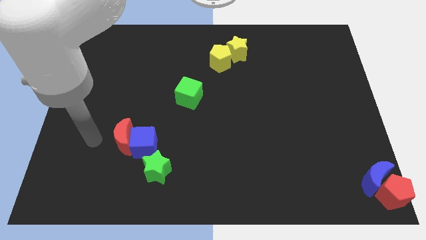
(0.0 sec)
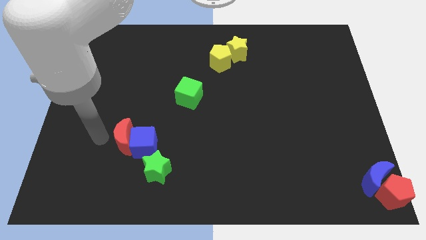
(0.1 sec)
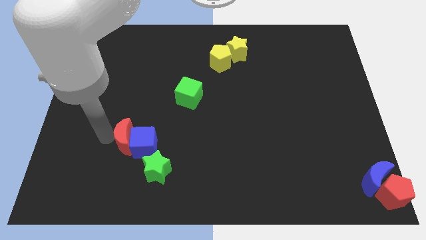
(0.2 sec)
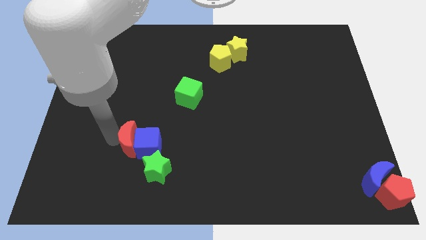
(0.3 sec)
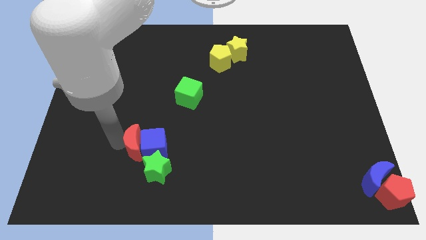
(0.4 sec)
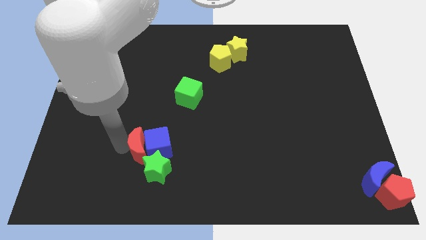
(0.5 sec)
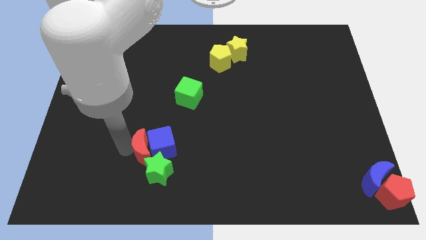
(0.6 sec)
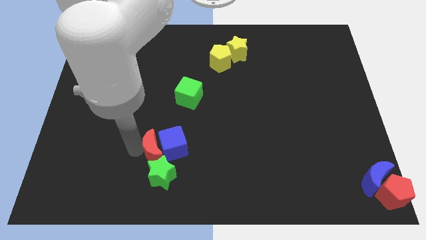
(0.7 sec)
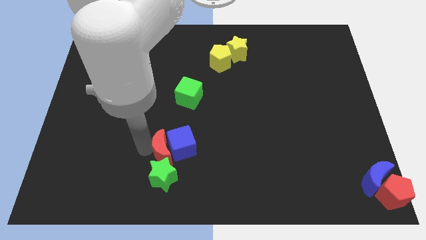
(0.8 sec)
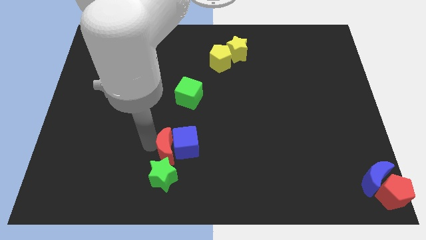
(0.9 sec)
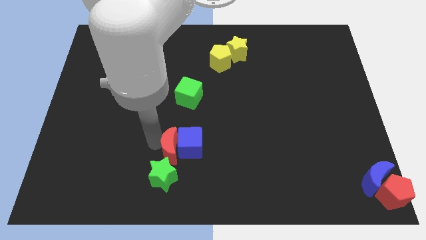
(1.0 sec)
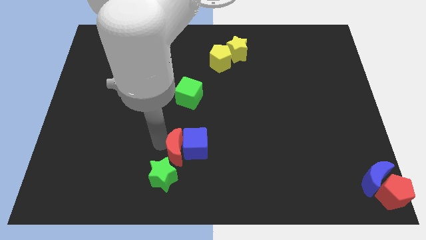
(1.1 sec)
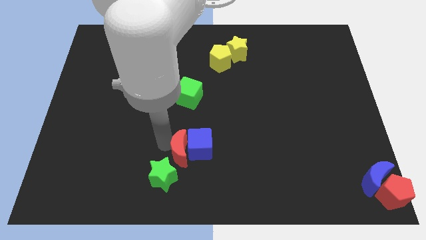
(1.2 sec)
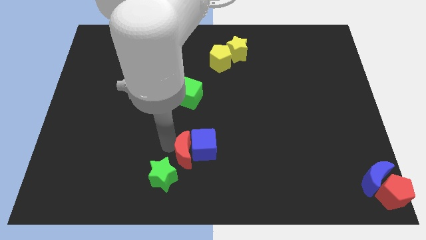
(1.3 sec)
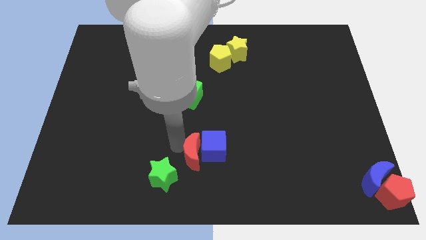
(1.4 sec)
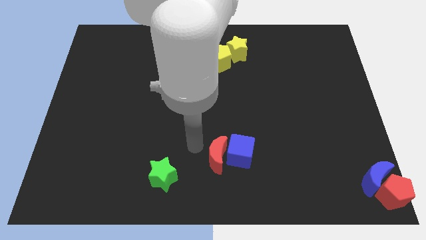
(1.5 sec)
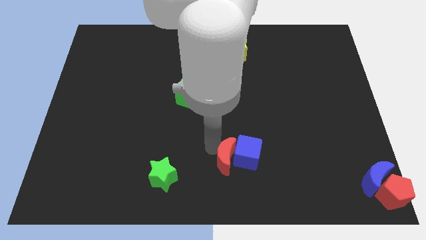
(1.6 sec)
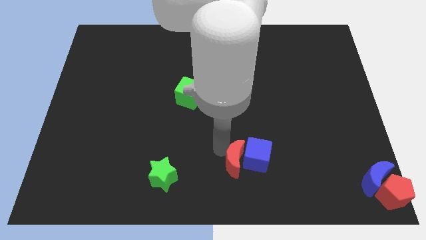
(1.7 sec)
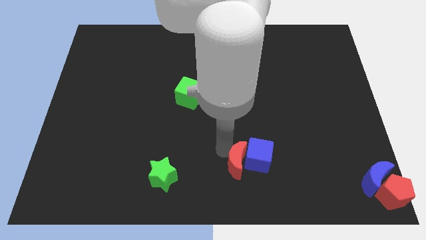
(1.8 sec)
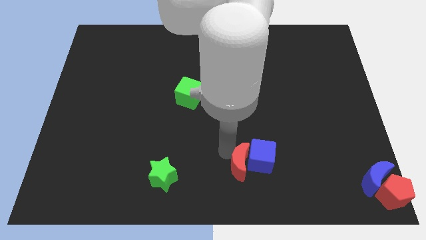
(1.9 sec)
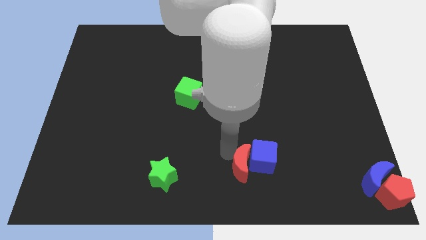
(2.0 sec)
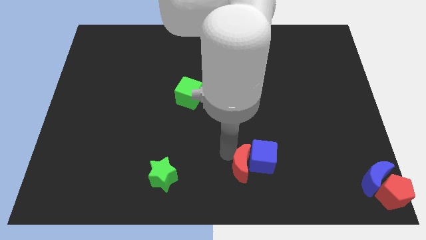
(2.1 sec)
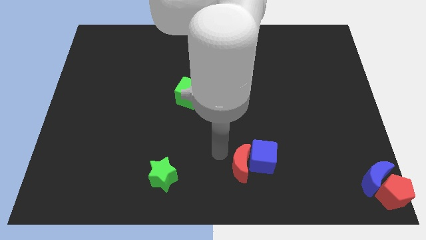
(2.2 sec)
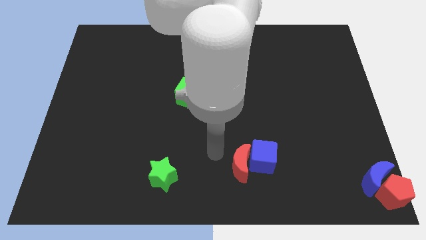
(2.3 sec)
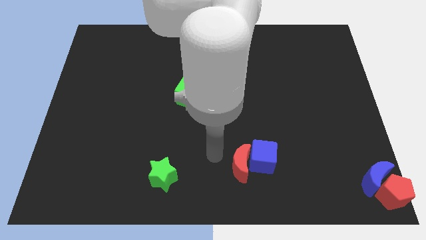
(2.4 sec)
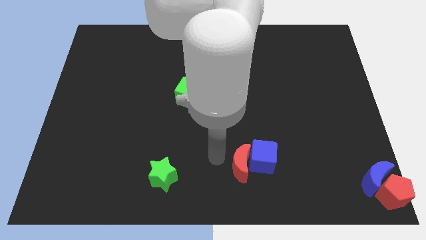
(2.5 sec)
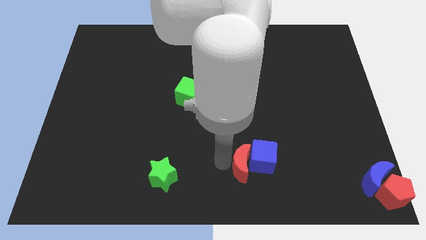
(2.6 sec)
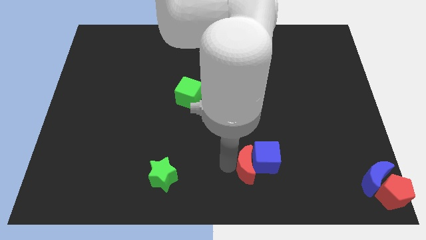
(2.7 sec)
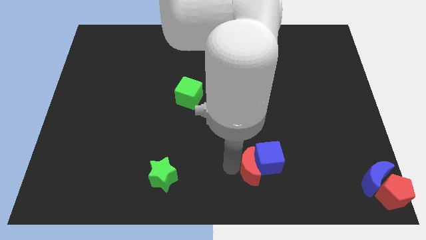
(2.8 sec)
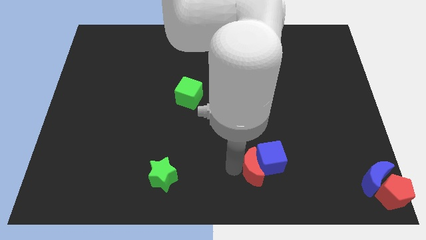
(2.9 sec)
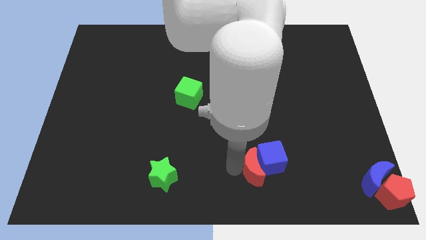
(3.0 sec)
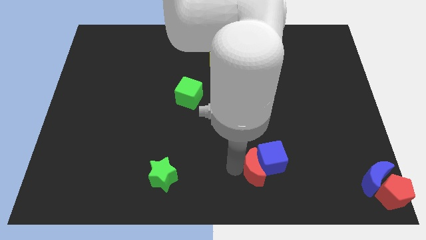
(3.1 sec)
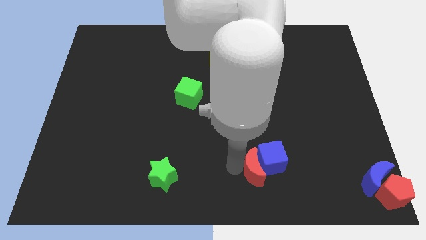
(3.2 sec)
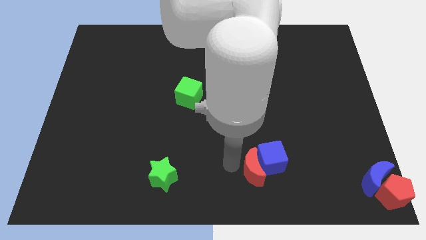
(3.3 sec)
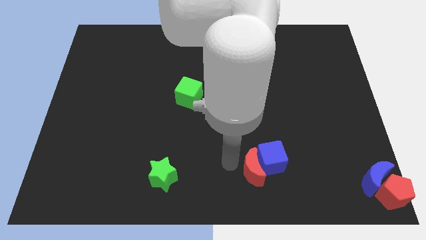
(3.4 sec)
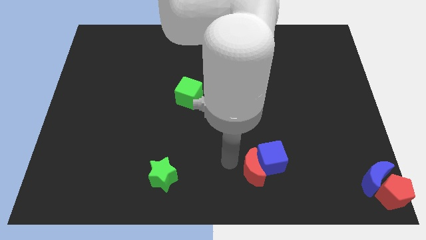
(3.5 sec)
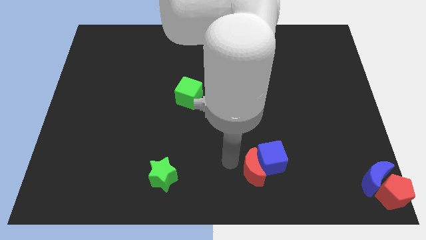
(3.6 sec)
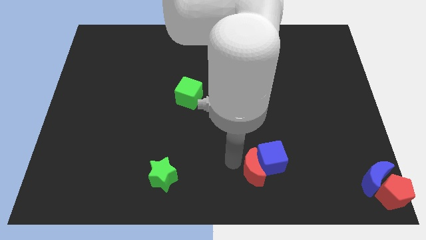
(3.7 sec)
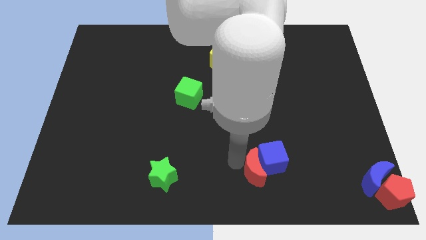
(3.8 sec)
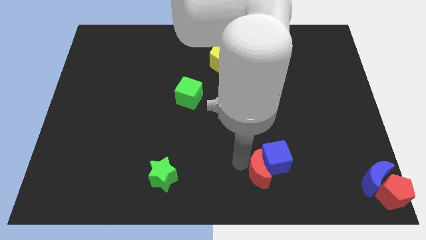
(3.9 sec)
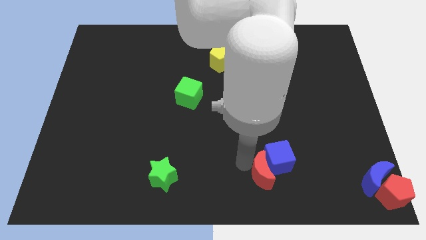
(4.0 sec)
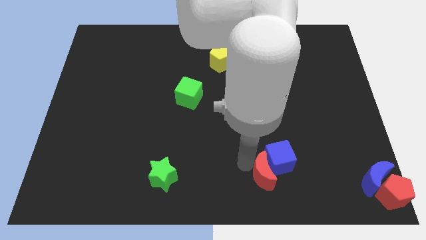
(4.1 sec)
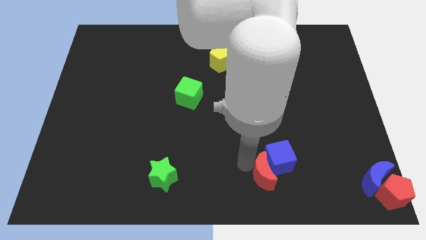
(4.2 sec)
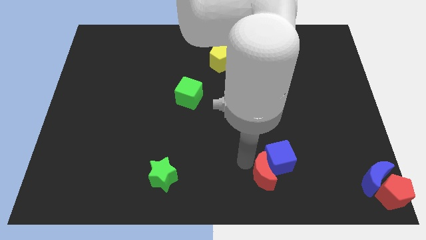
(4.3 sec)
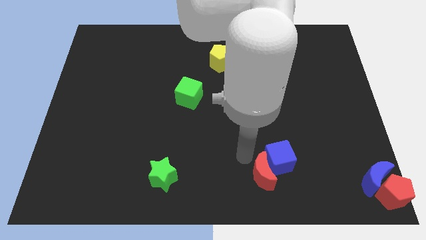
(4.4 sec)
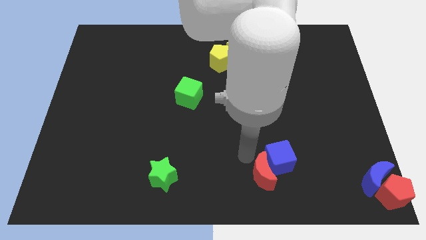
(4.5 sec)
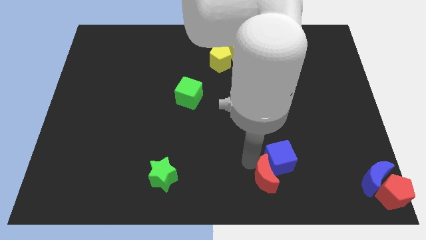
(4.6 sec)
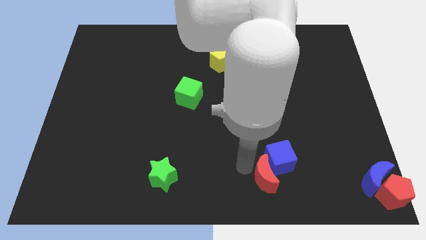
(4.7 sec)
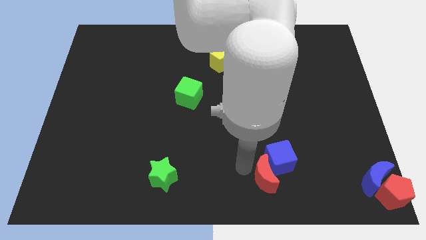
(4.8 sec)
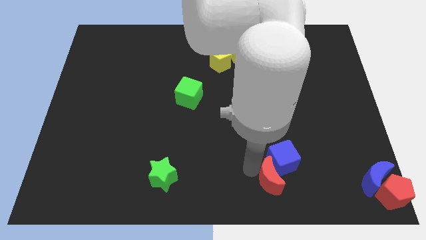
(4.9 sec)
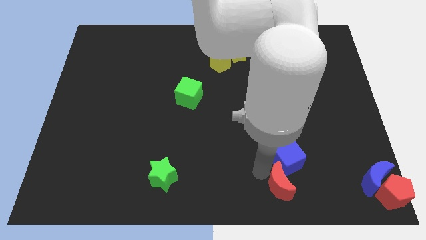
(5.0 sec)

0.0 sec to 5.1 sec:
push the blue cube and red moon to the right side of the board

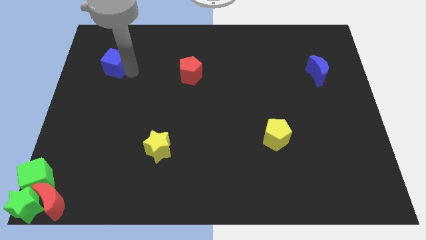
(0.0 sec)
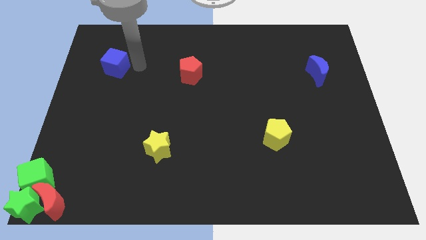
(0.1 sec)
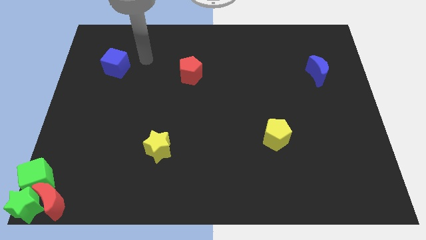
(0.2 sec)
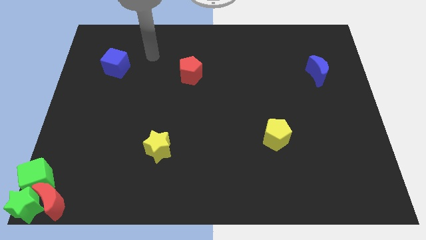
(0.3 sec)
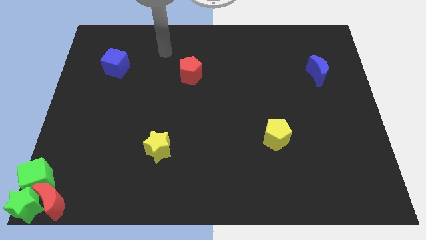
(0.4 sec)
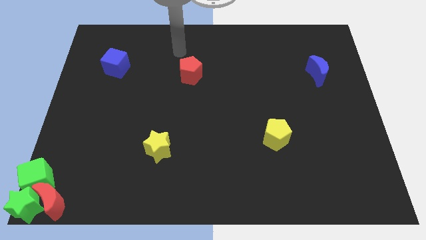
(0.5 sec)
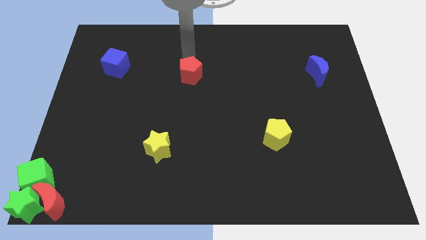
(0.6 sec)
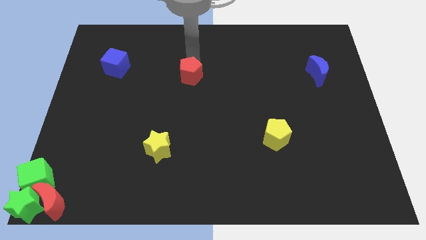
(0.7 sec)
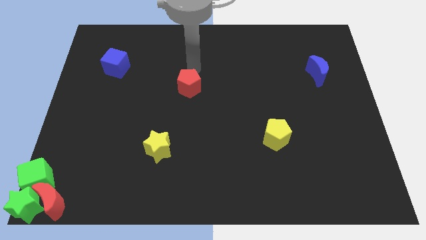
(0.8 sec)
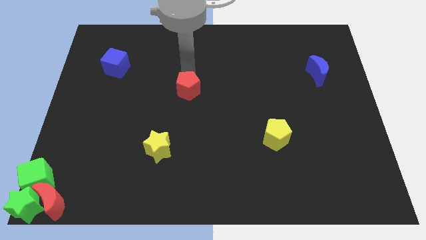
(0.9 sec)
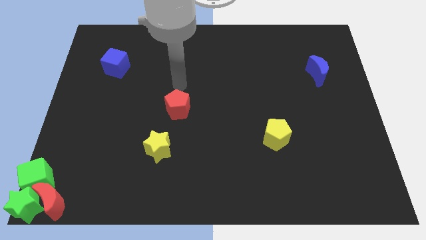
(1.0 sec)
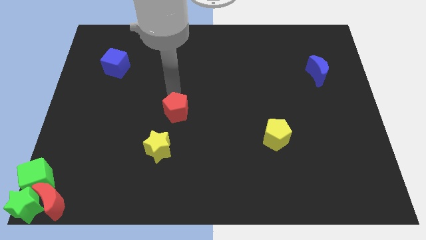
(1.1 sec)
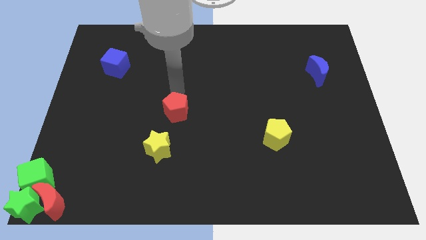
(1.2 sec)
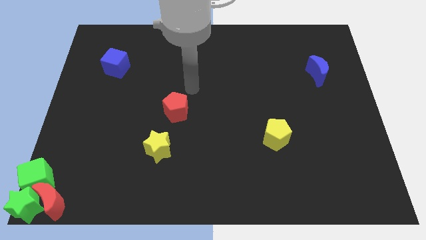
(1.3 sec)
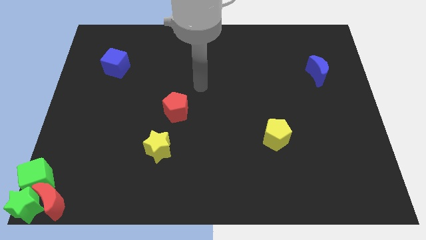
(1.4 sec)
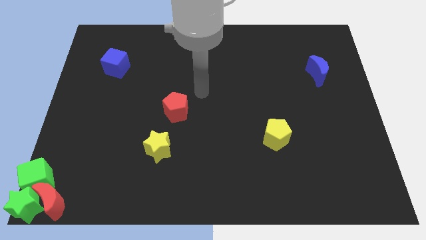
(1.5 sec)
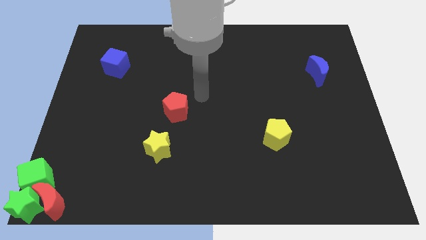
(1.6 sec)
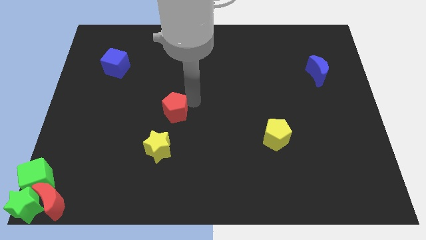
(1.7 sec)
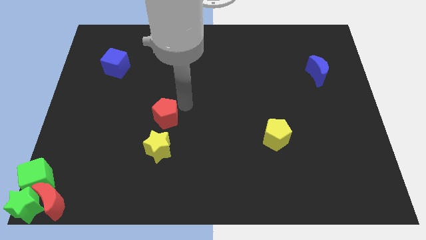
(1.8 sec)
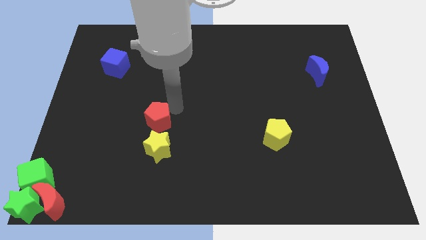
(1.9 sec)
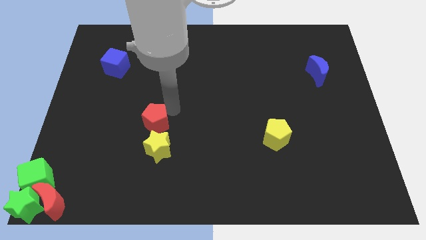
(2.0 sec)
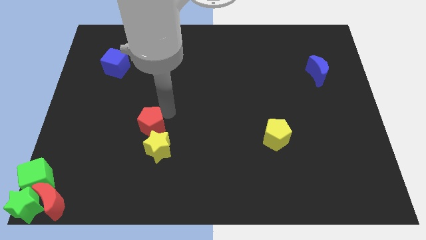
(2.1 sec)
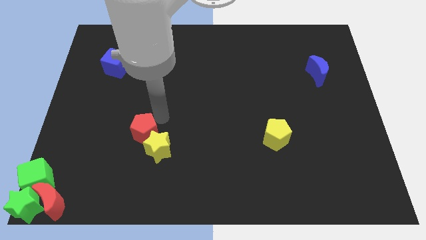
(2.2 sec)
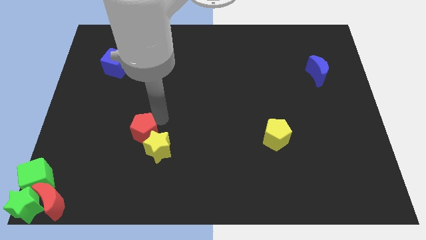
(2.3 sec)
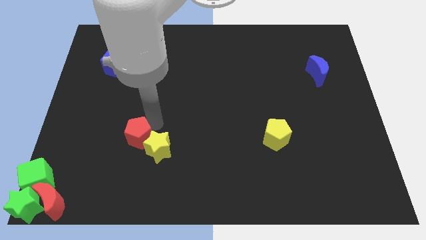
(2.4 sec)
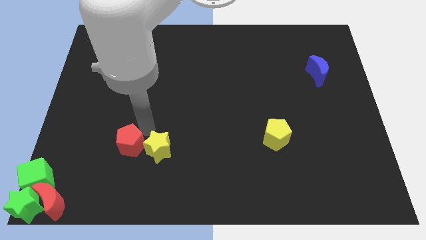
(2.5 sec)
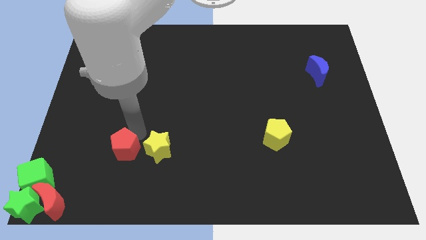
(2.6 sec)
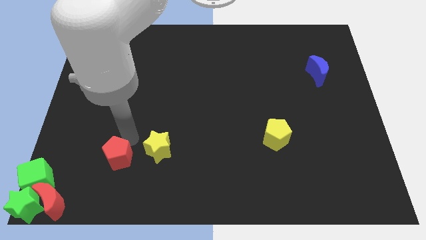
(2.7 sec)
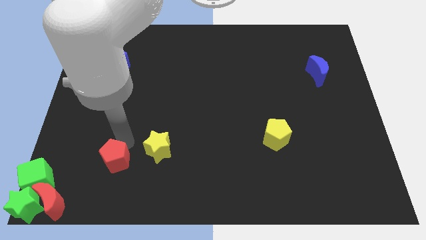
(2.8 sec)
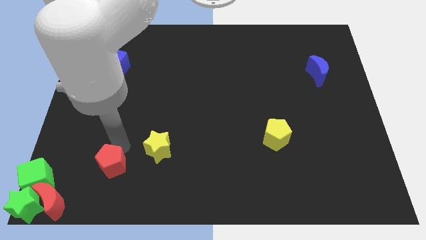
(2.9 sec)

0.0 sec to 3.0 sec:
place the red pentagon to the left of the yellow star

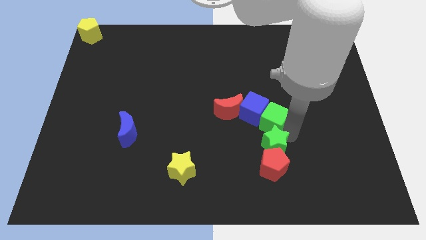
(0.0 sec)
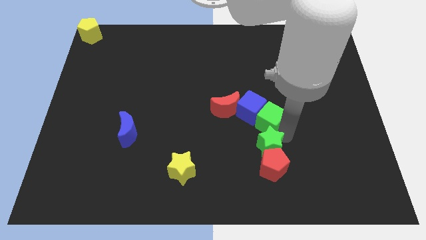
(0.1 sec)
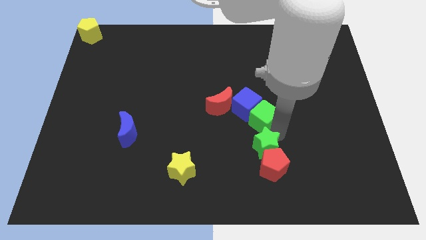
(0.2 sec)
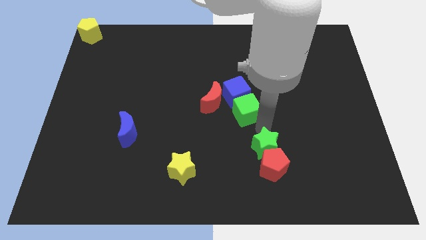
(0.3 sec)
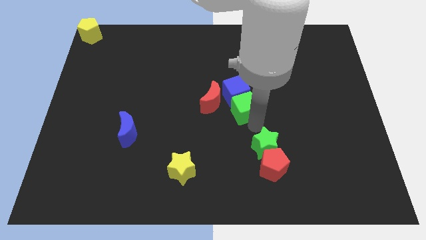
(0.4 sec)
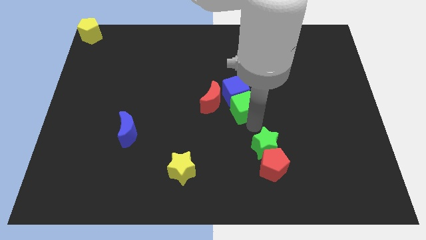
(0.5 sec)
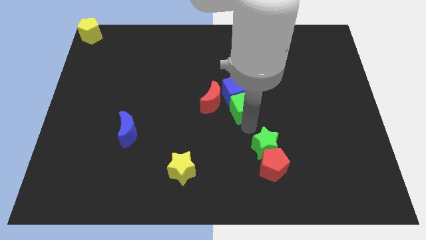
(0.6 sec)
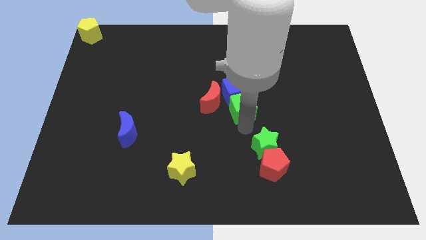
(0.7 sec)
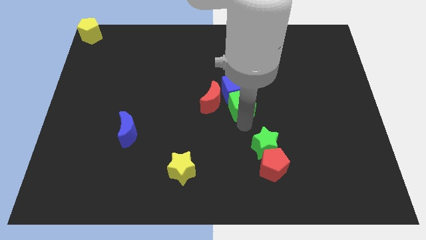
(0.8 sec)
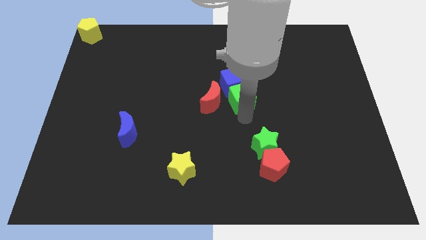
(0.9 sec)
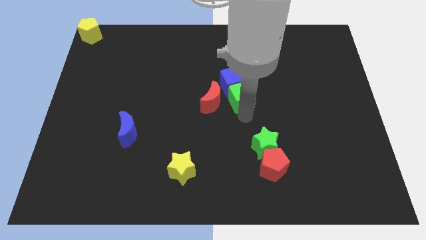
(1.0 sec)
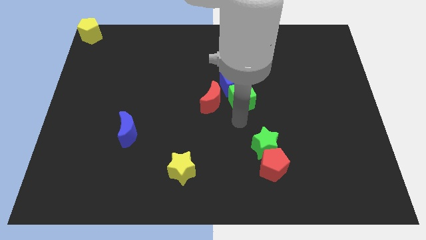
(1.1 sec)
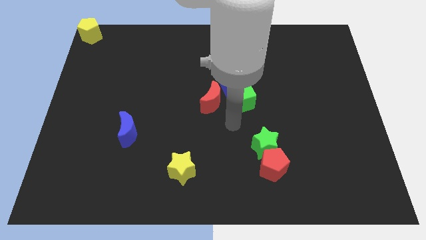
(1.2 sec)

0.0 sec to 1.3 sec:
separate the green star and green cube
